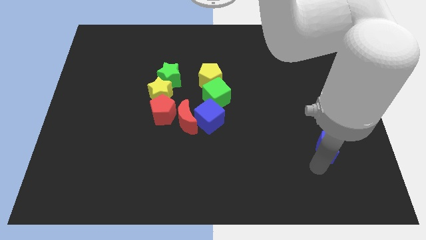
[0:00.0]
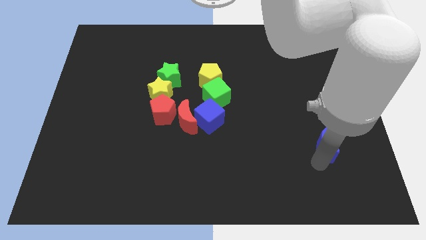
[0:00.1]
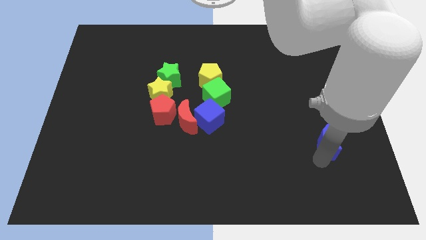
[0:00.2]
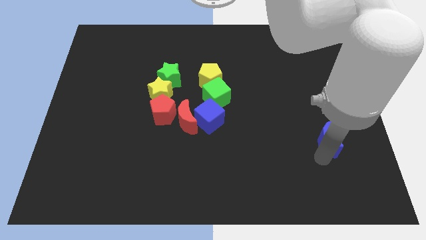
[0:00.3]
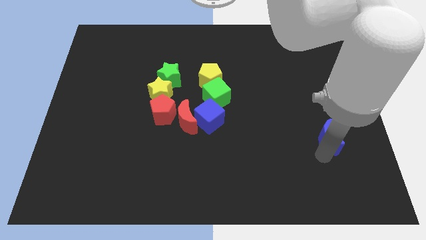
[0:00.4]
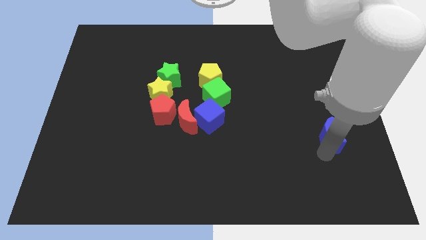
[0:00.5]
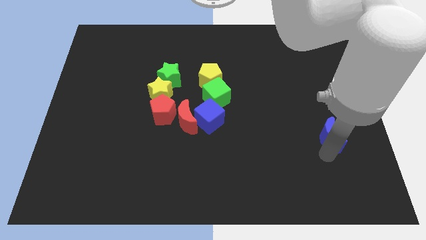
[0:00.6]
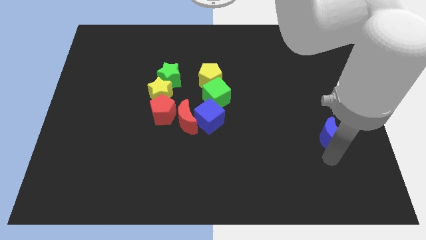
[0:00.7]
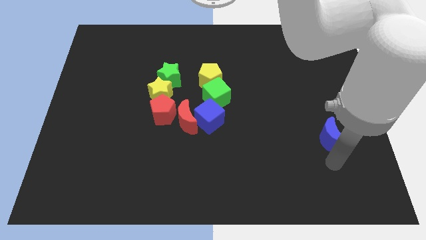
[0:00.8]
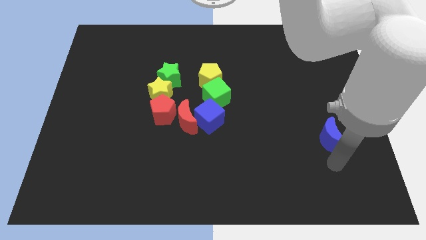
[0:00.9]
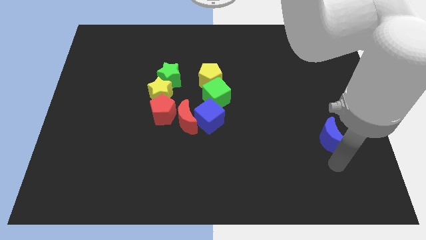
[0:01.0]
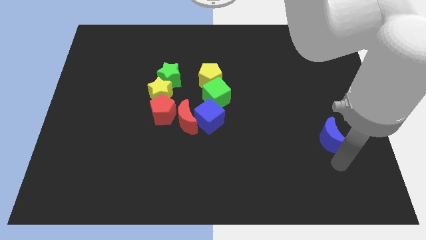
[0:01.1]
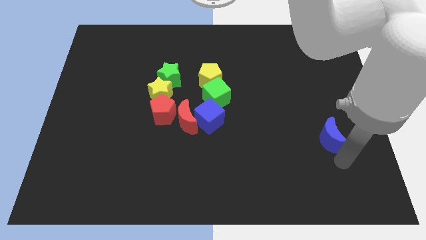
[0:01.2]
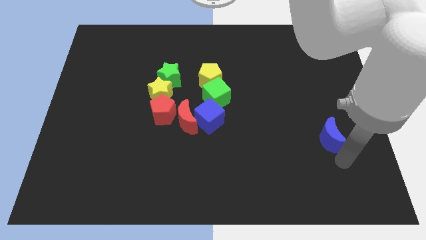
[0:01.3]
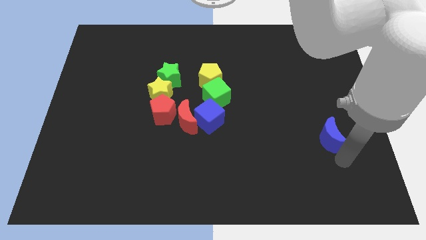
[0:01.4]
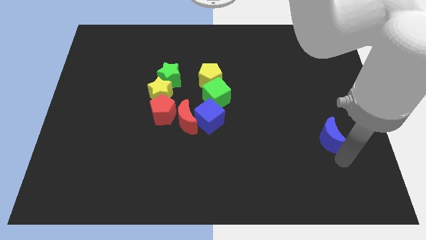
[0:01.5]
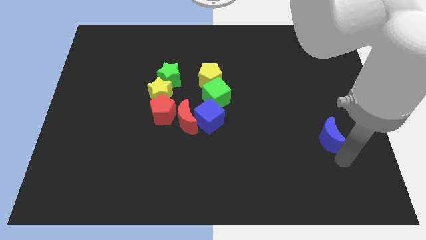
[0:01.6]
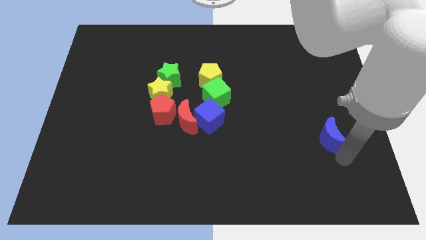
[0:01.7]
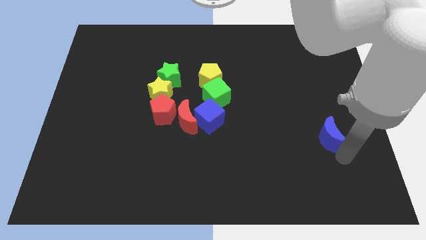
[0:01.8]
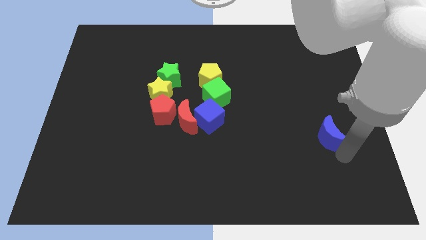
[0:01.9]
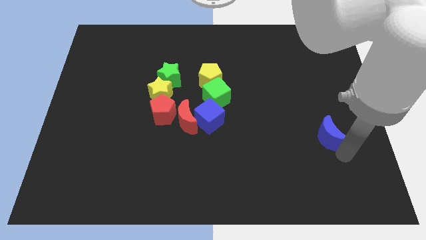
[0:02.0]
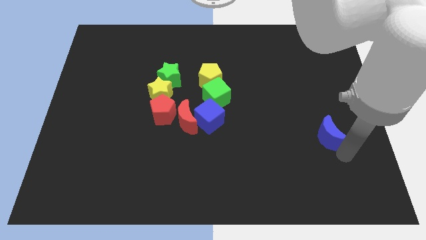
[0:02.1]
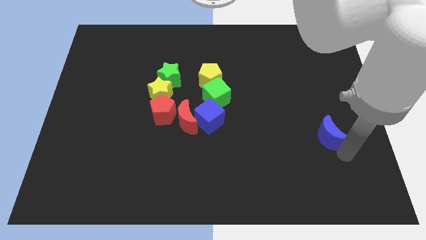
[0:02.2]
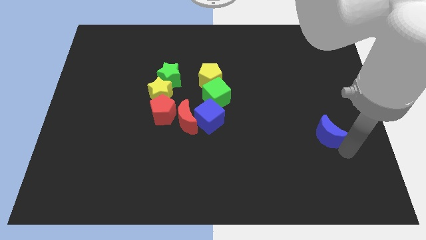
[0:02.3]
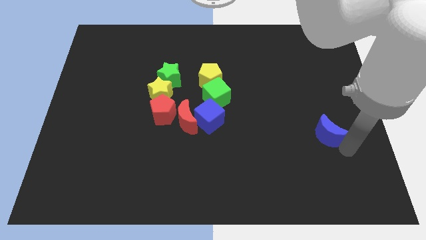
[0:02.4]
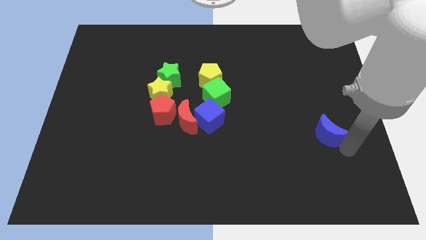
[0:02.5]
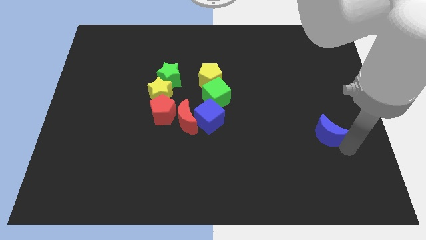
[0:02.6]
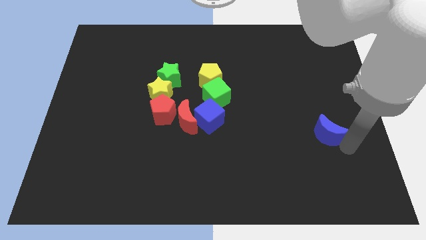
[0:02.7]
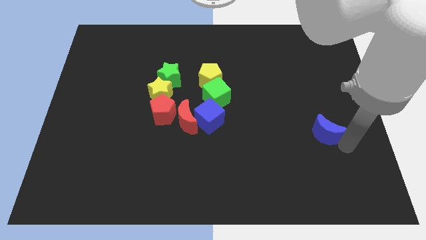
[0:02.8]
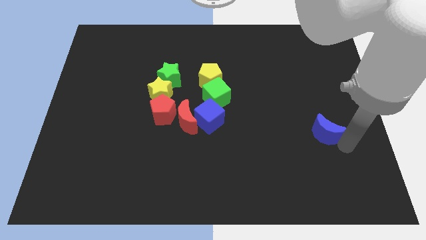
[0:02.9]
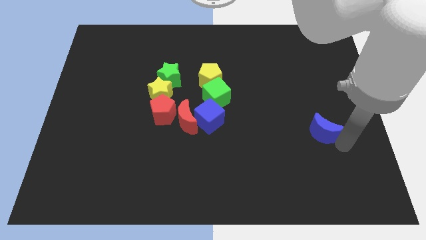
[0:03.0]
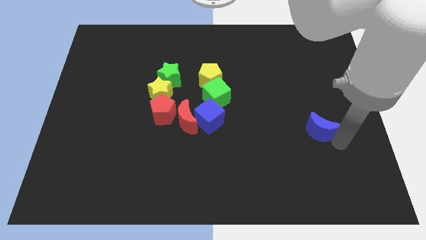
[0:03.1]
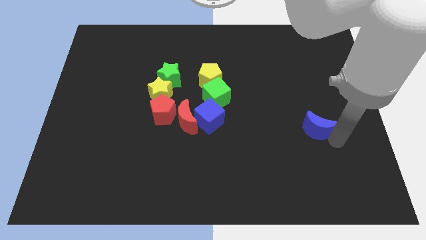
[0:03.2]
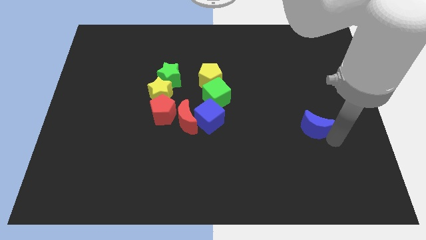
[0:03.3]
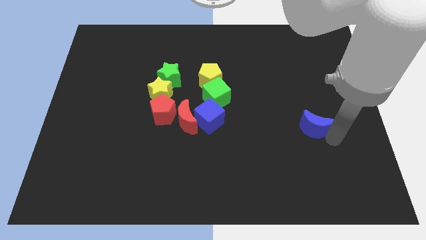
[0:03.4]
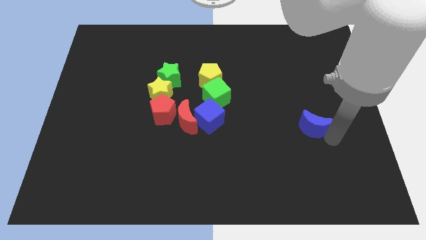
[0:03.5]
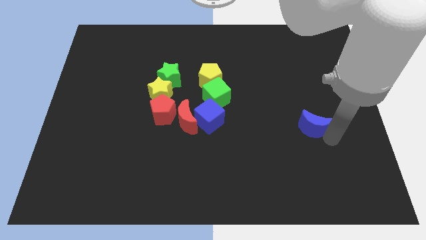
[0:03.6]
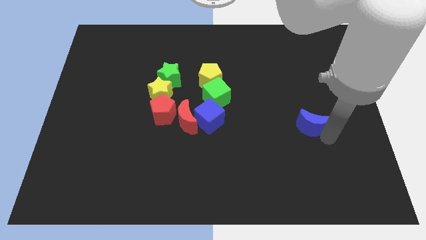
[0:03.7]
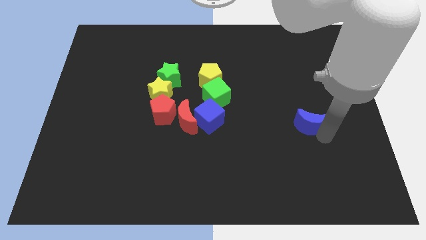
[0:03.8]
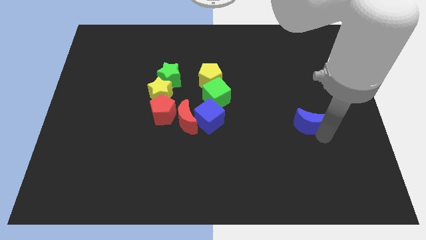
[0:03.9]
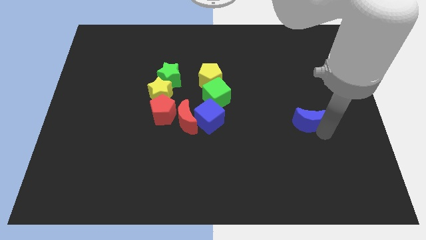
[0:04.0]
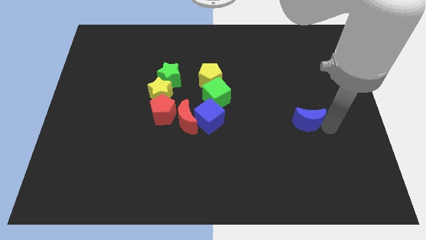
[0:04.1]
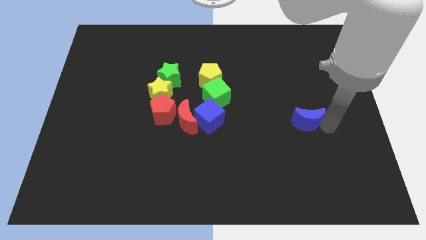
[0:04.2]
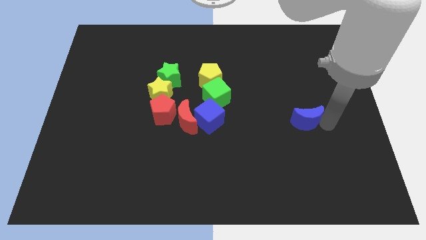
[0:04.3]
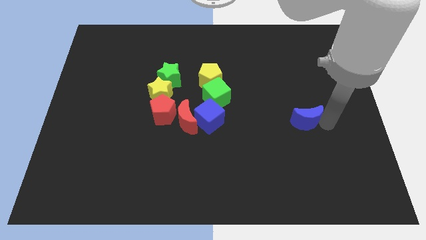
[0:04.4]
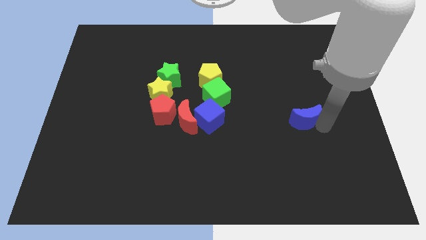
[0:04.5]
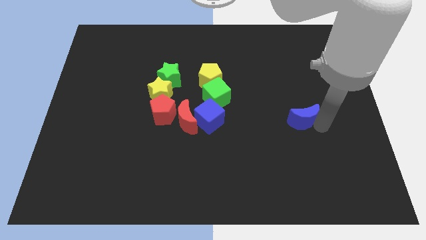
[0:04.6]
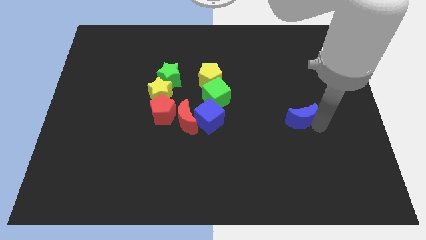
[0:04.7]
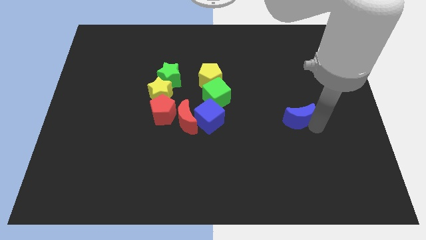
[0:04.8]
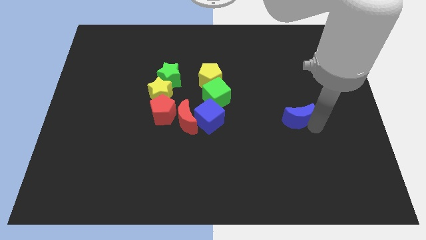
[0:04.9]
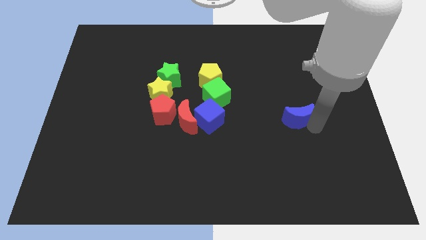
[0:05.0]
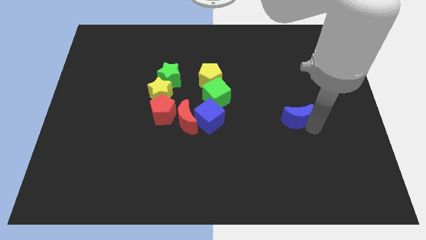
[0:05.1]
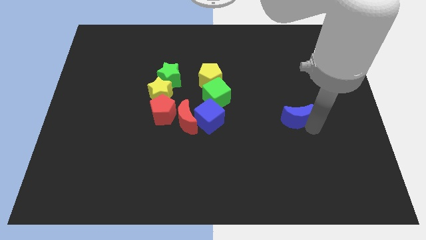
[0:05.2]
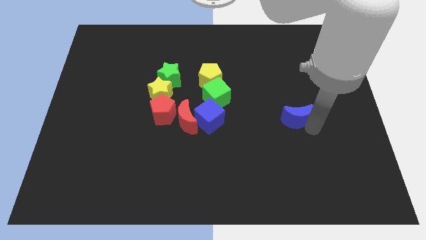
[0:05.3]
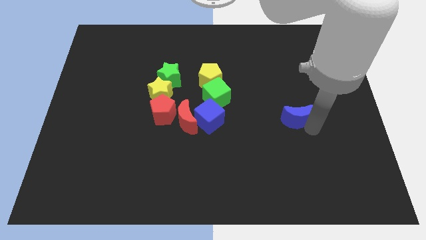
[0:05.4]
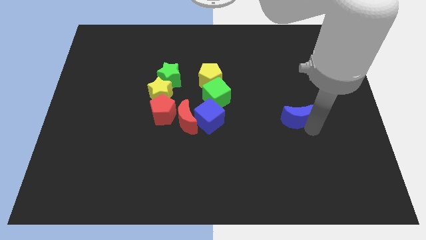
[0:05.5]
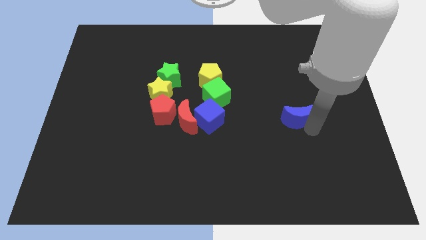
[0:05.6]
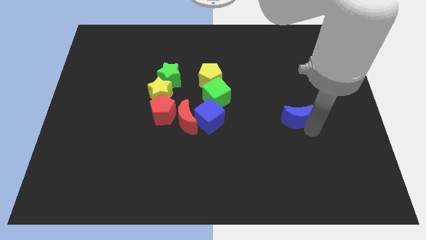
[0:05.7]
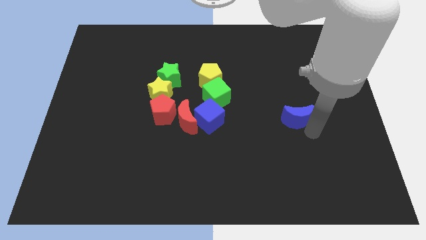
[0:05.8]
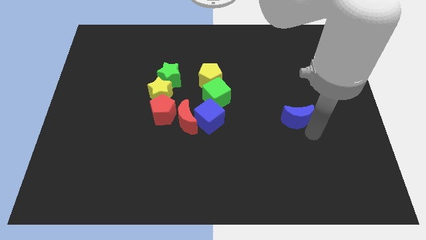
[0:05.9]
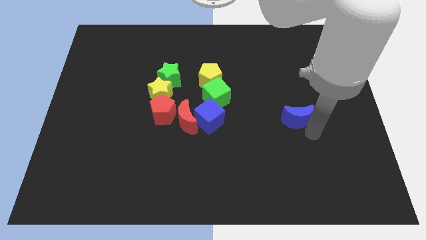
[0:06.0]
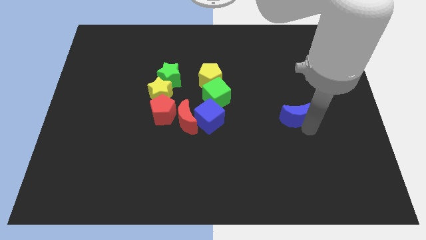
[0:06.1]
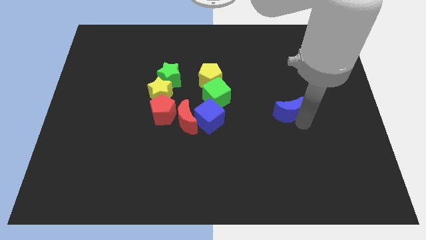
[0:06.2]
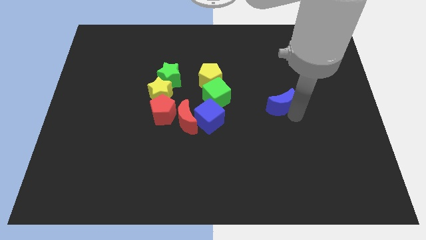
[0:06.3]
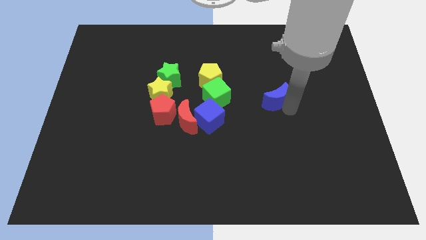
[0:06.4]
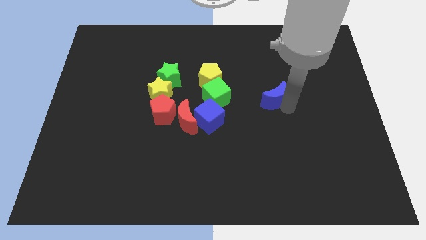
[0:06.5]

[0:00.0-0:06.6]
push the blue crescent parallel to the green cube

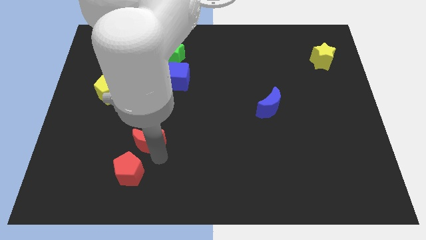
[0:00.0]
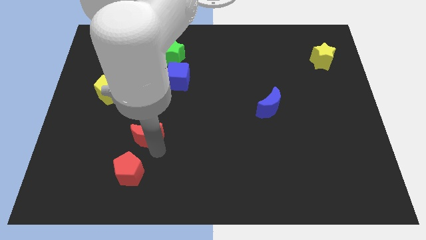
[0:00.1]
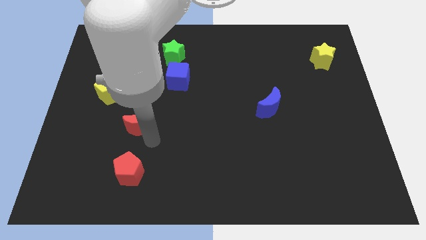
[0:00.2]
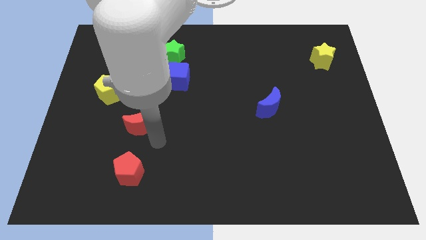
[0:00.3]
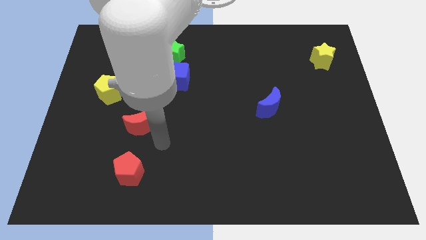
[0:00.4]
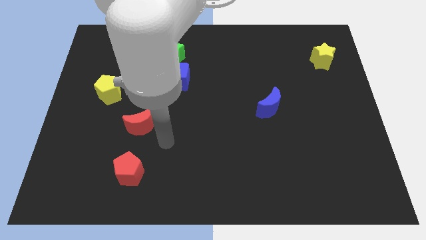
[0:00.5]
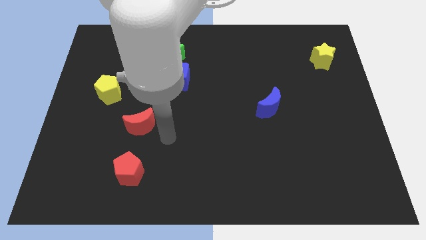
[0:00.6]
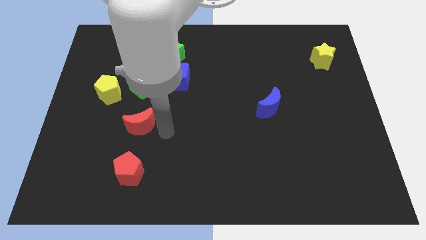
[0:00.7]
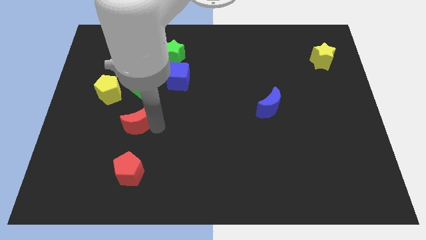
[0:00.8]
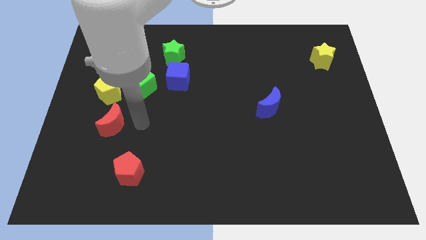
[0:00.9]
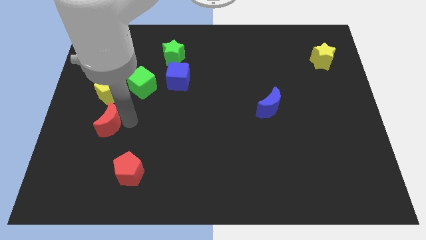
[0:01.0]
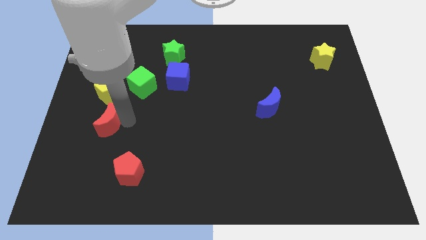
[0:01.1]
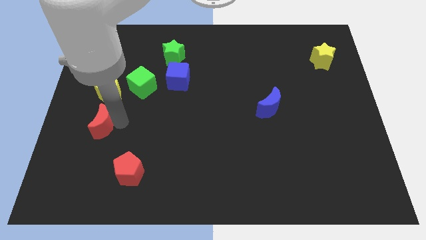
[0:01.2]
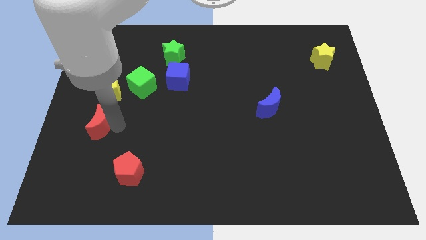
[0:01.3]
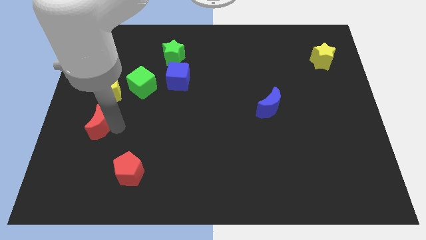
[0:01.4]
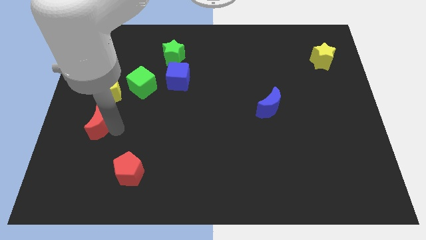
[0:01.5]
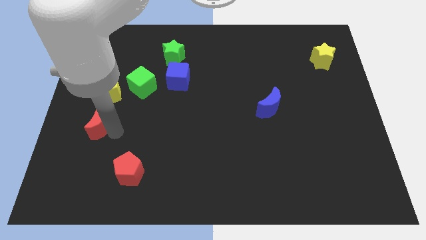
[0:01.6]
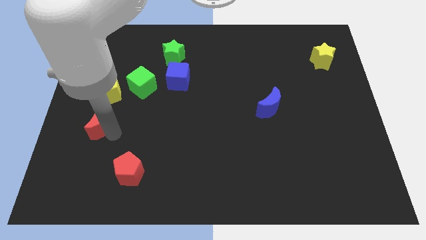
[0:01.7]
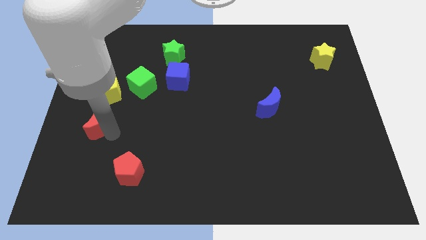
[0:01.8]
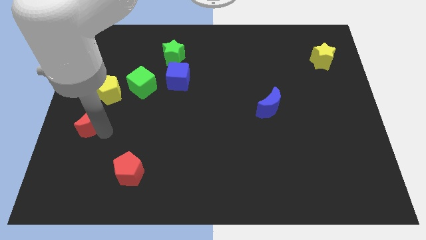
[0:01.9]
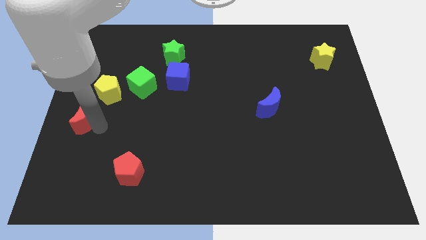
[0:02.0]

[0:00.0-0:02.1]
move the red crescent to the left center
